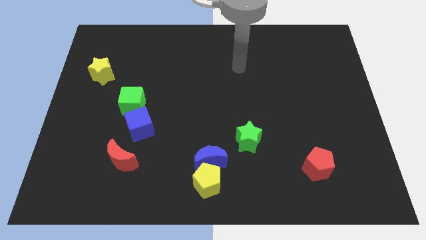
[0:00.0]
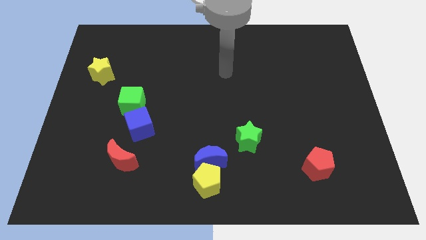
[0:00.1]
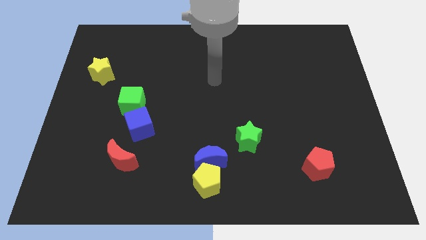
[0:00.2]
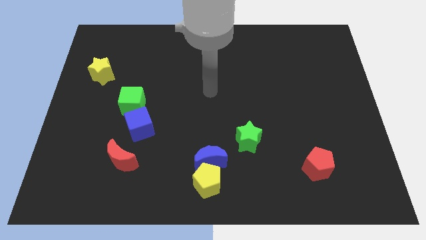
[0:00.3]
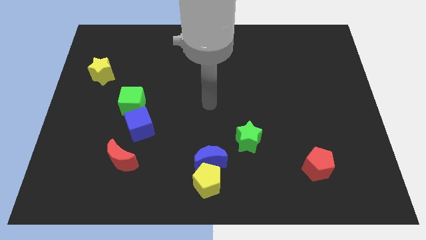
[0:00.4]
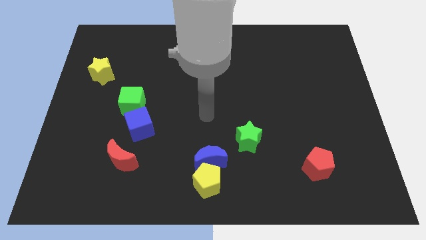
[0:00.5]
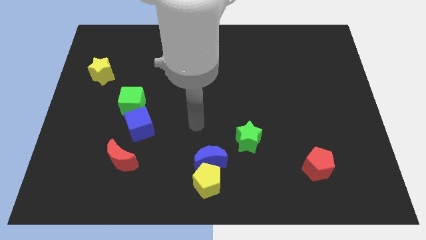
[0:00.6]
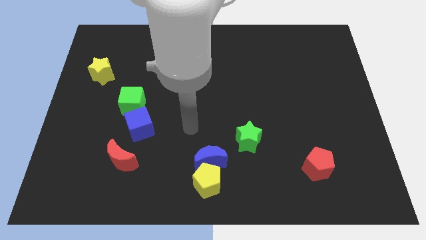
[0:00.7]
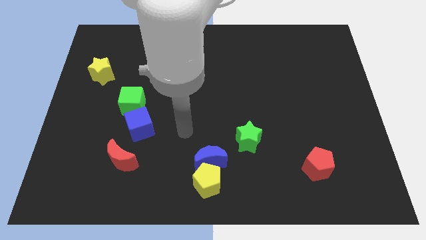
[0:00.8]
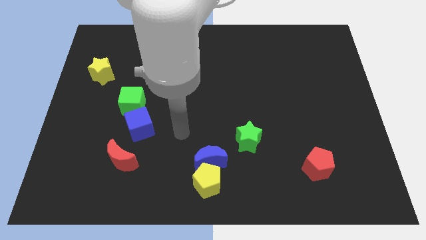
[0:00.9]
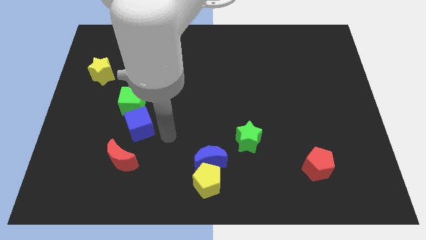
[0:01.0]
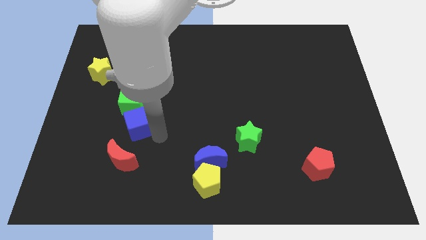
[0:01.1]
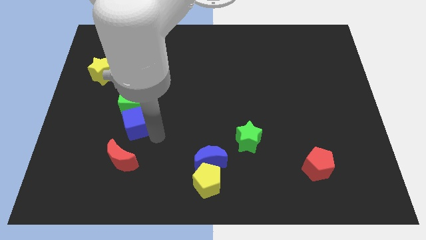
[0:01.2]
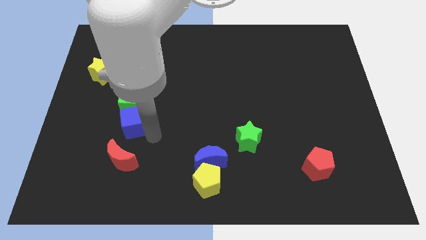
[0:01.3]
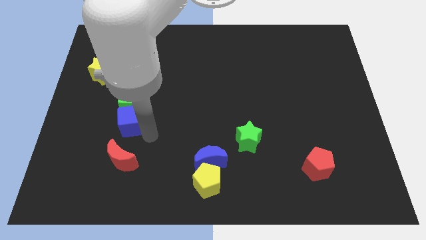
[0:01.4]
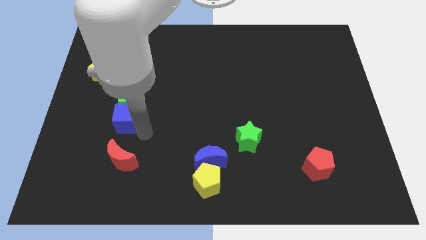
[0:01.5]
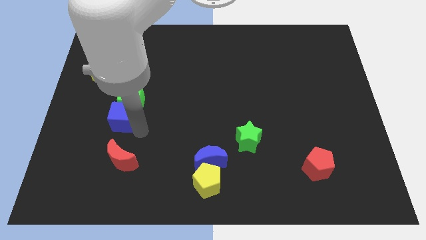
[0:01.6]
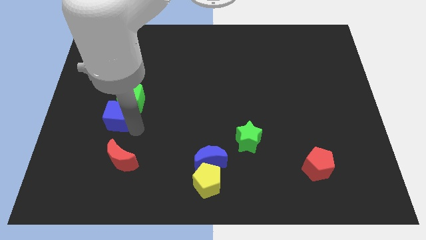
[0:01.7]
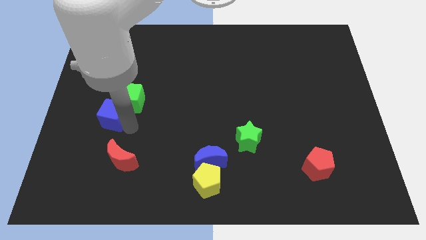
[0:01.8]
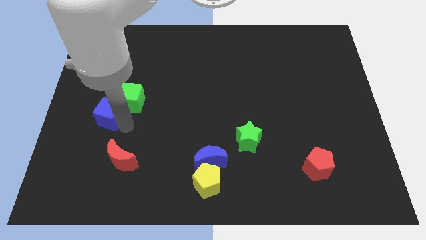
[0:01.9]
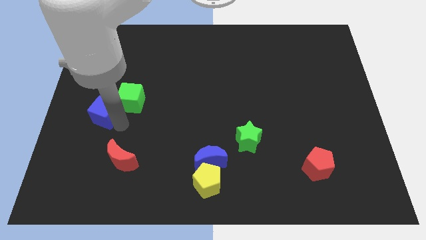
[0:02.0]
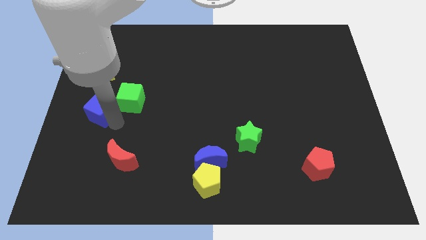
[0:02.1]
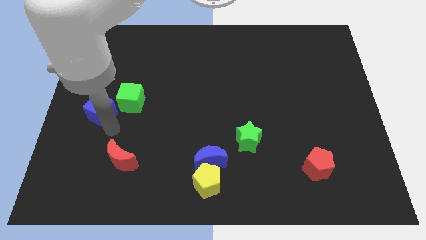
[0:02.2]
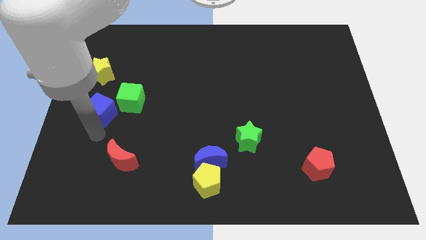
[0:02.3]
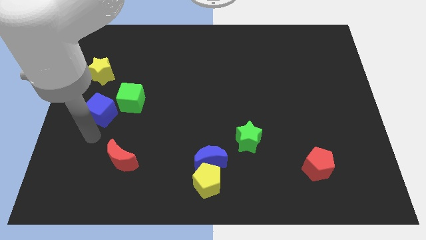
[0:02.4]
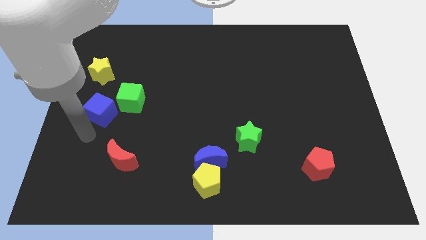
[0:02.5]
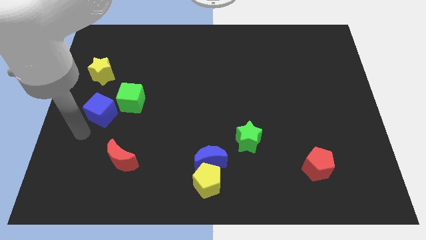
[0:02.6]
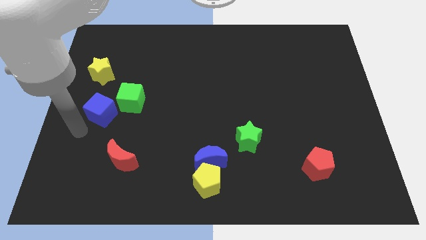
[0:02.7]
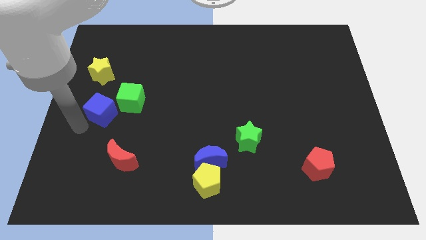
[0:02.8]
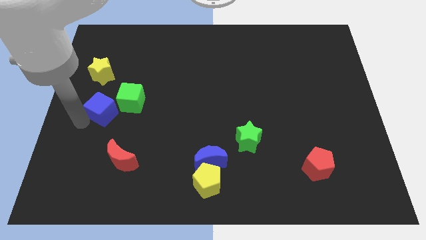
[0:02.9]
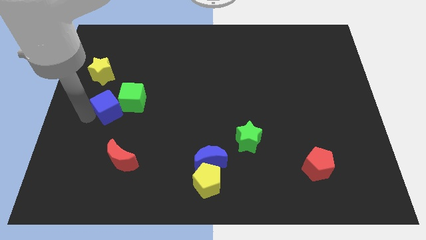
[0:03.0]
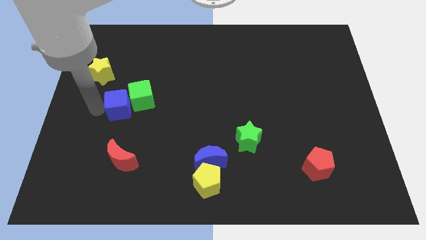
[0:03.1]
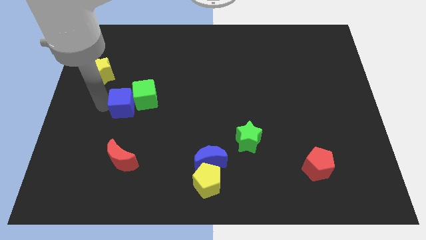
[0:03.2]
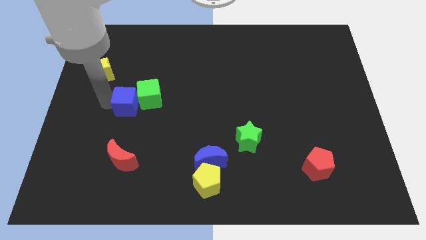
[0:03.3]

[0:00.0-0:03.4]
move the arm towards the blue cube

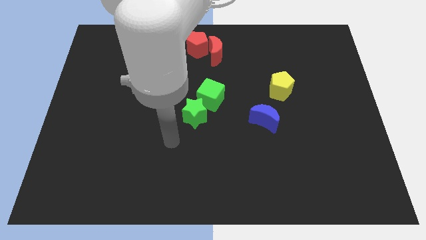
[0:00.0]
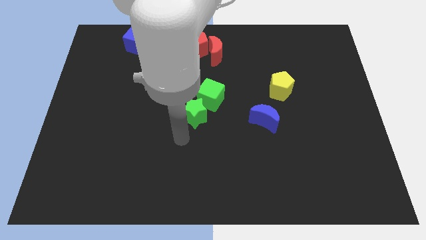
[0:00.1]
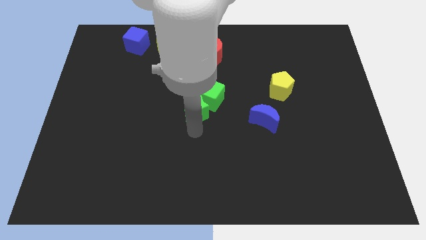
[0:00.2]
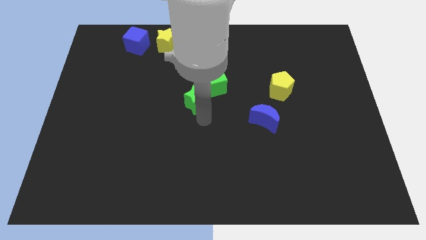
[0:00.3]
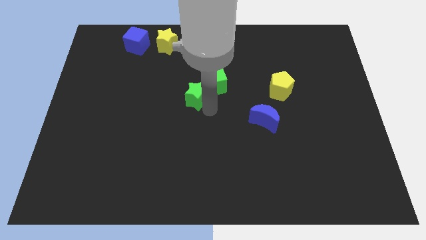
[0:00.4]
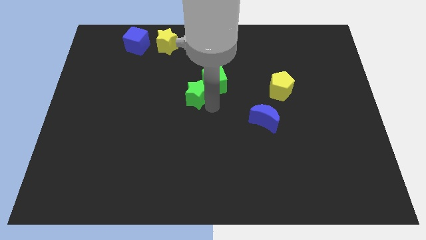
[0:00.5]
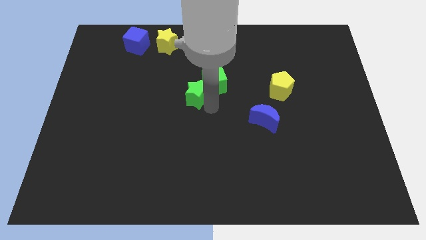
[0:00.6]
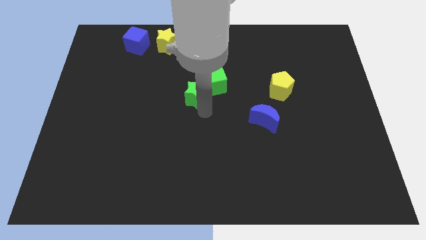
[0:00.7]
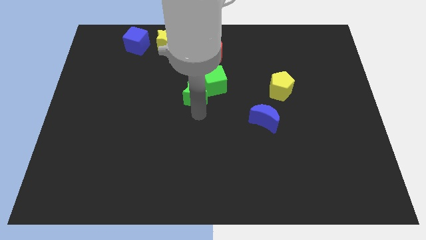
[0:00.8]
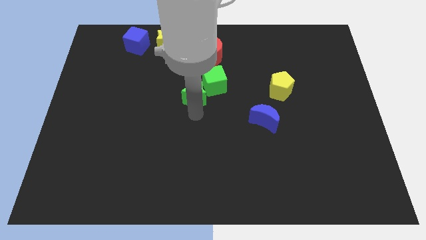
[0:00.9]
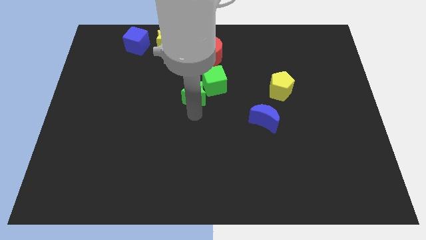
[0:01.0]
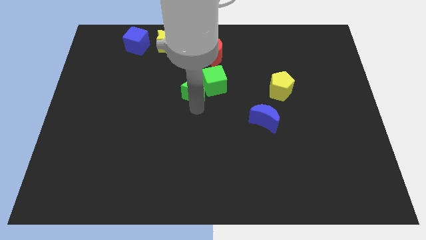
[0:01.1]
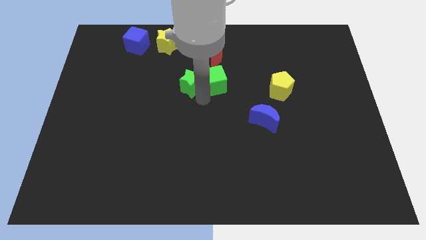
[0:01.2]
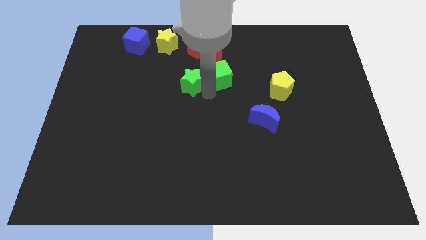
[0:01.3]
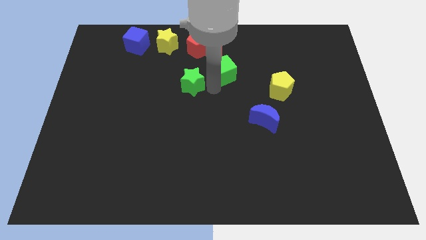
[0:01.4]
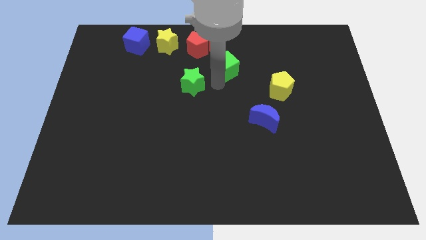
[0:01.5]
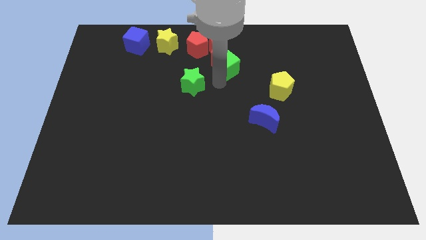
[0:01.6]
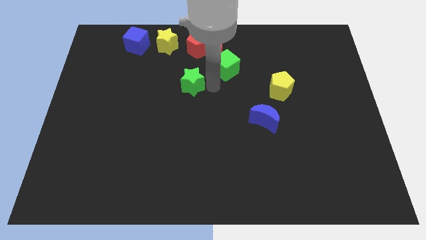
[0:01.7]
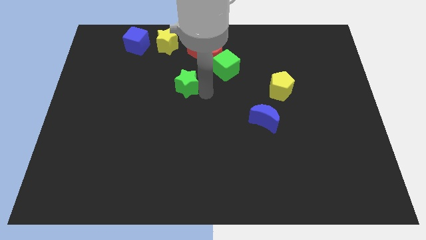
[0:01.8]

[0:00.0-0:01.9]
separate the green cube and green star

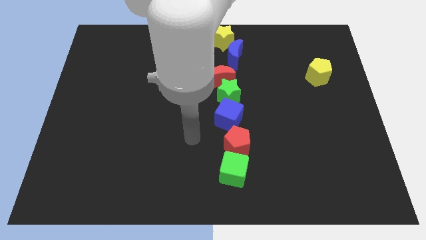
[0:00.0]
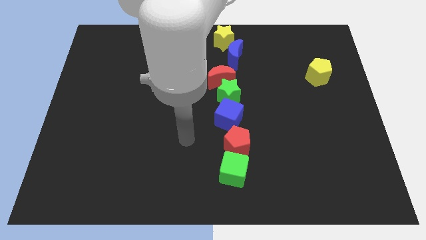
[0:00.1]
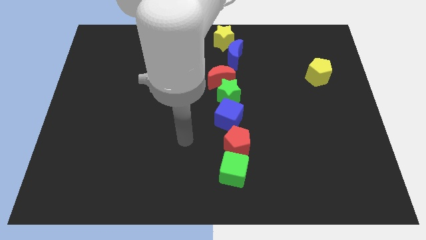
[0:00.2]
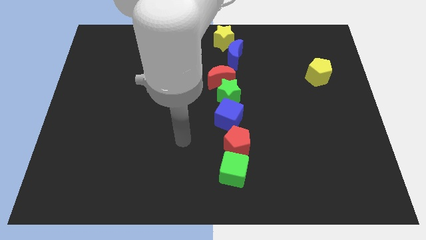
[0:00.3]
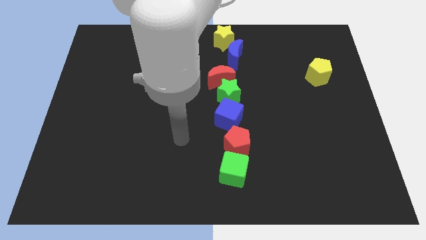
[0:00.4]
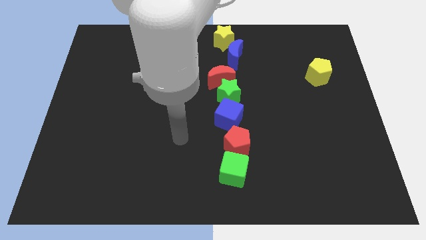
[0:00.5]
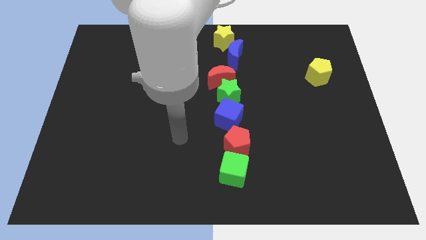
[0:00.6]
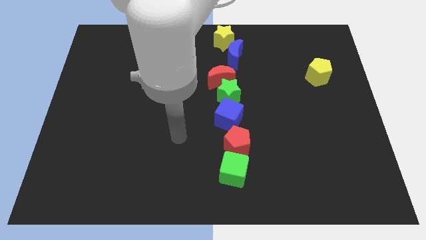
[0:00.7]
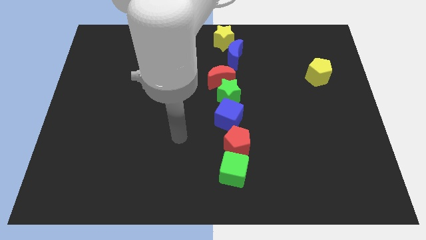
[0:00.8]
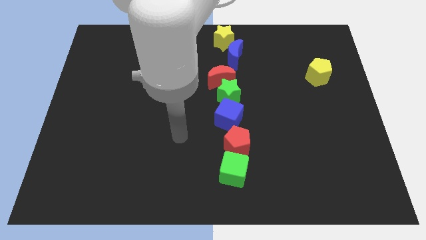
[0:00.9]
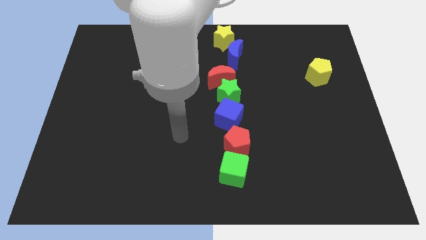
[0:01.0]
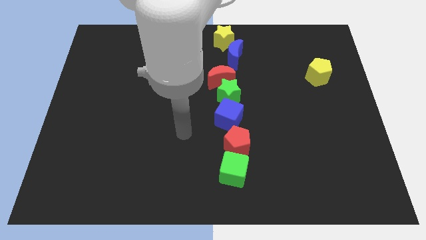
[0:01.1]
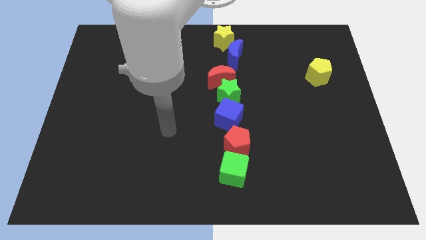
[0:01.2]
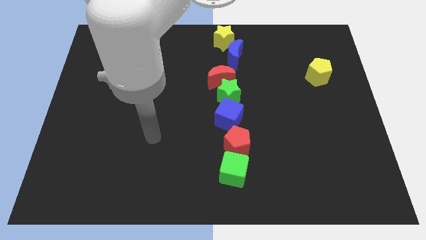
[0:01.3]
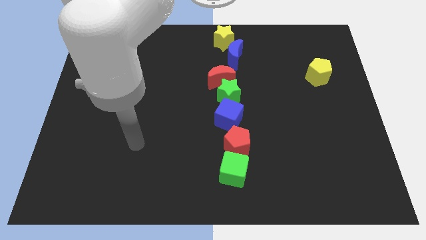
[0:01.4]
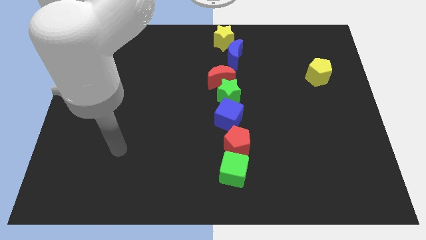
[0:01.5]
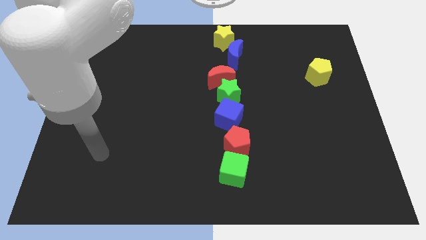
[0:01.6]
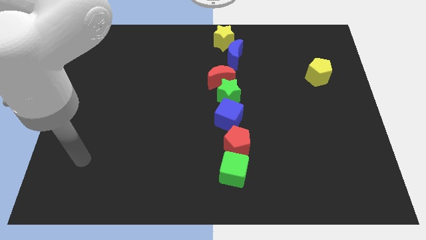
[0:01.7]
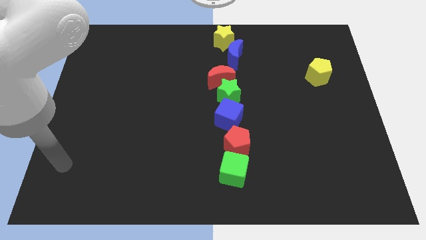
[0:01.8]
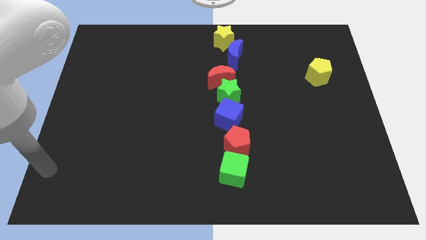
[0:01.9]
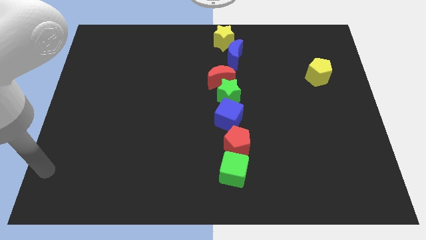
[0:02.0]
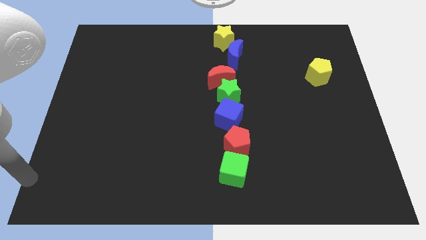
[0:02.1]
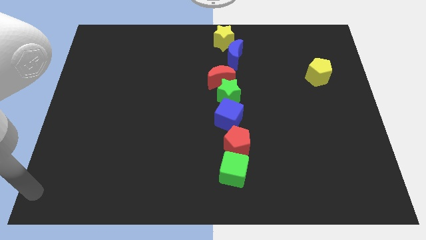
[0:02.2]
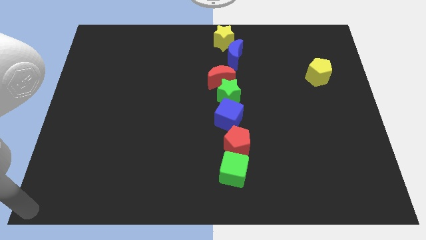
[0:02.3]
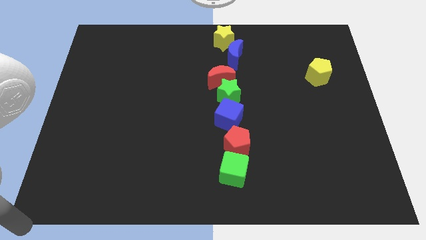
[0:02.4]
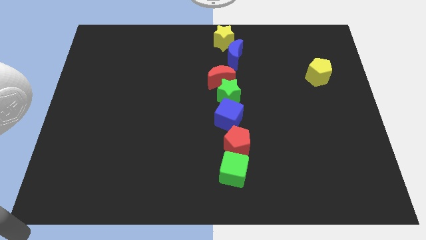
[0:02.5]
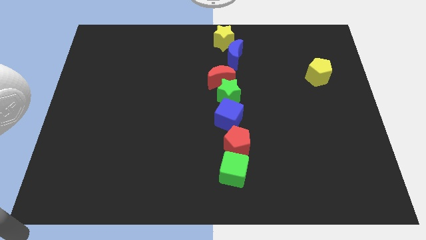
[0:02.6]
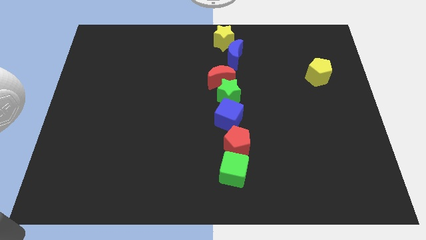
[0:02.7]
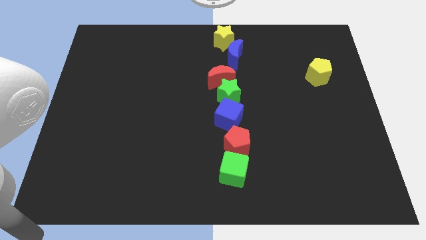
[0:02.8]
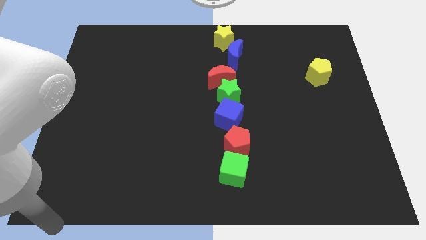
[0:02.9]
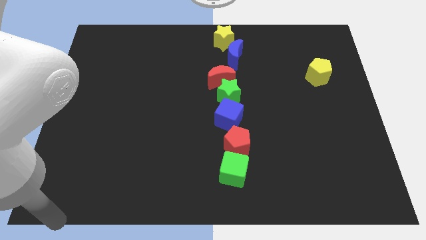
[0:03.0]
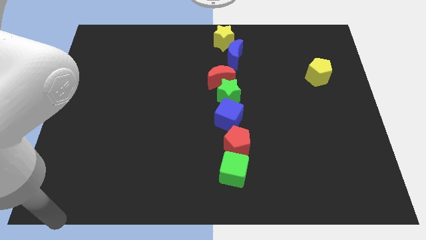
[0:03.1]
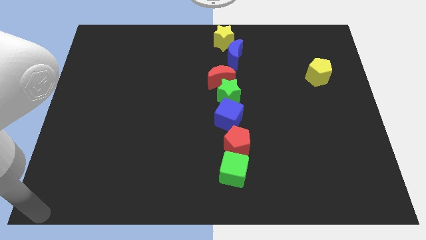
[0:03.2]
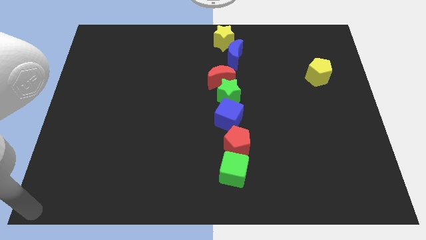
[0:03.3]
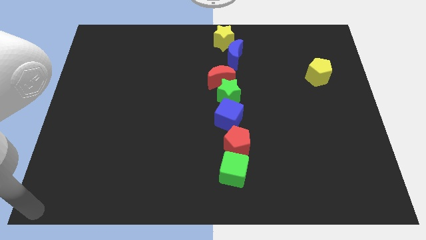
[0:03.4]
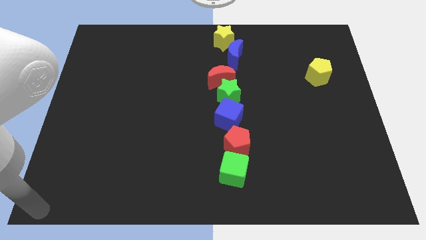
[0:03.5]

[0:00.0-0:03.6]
move your arm to the bottom left of the board
